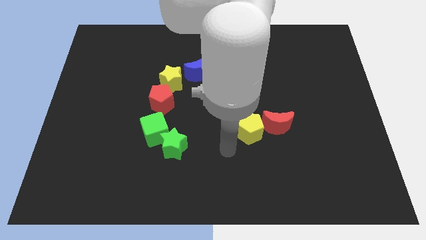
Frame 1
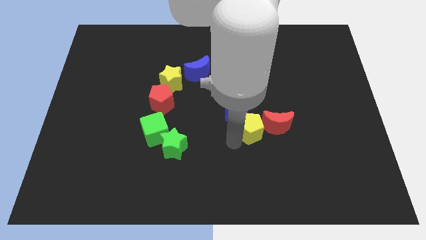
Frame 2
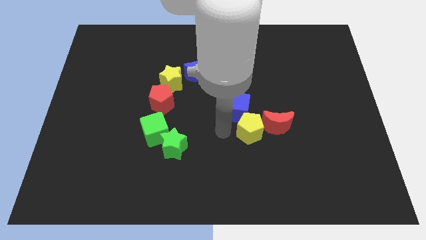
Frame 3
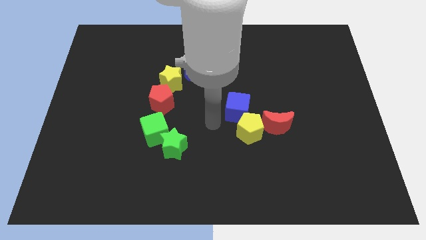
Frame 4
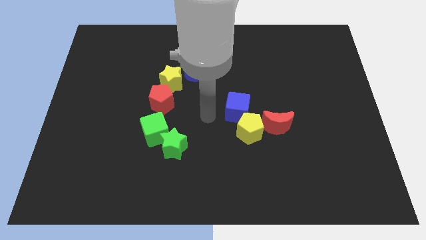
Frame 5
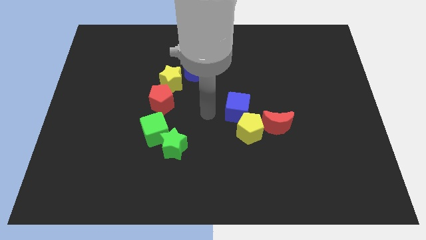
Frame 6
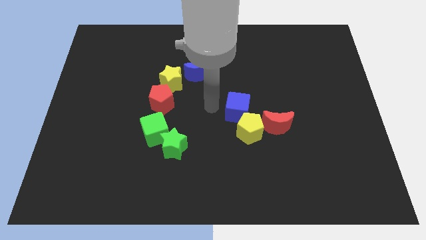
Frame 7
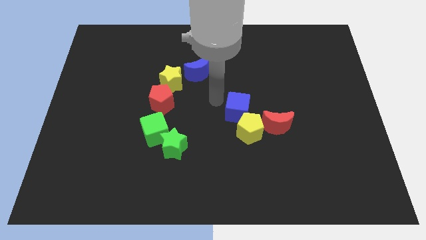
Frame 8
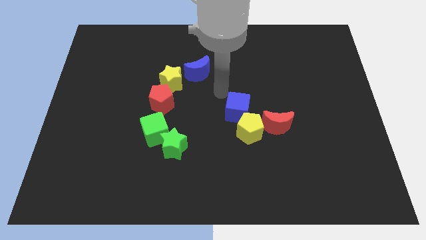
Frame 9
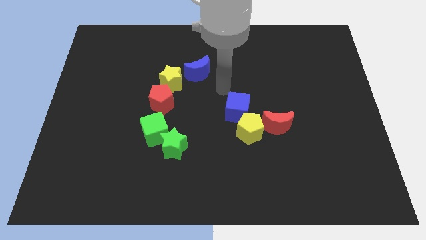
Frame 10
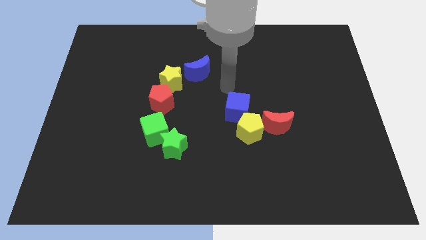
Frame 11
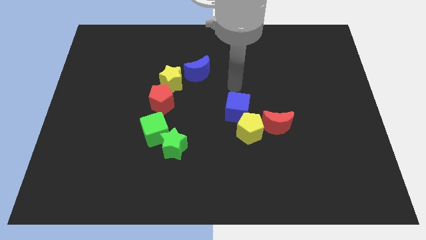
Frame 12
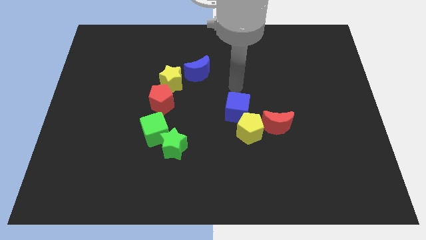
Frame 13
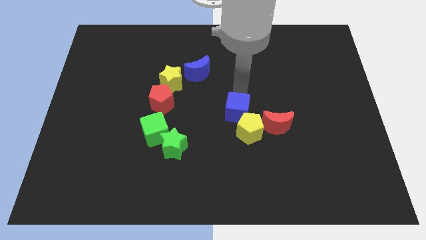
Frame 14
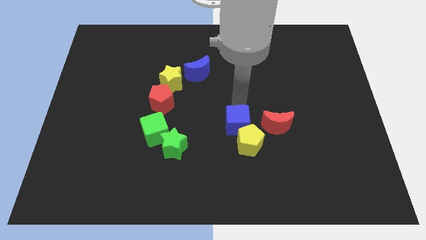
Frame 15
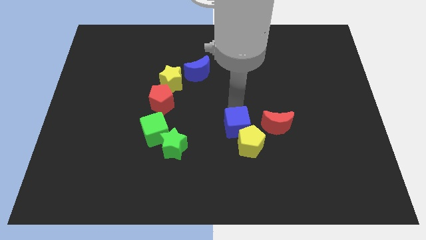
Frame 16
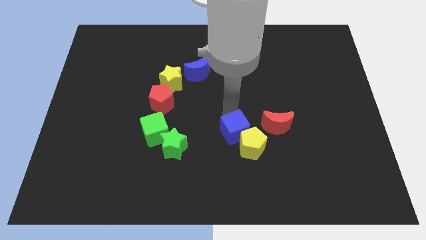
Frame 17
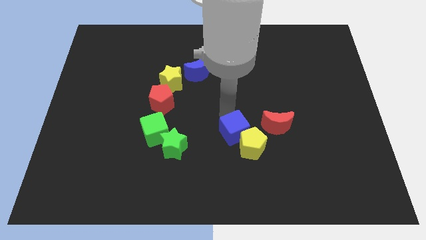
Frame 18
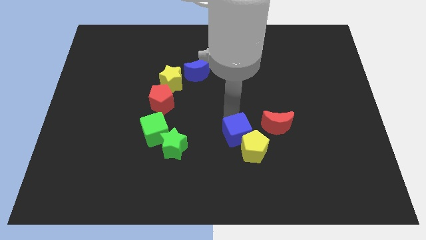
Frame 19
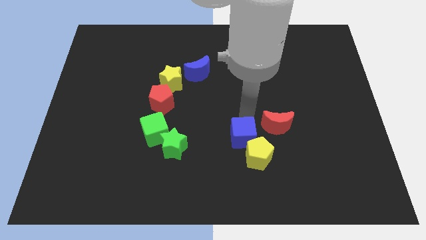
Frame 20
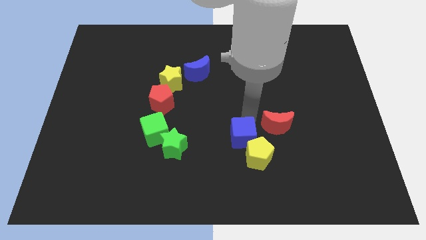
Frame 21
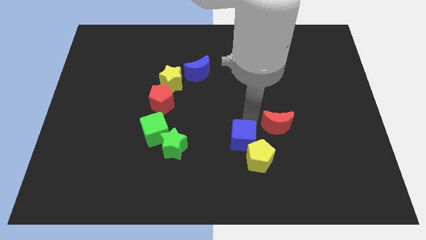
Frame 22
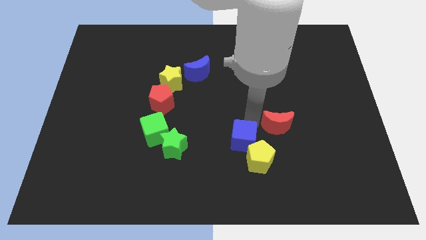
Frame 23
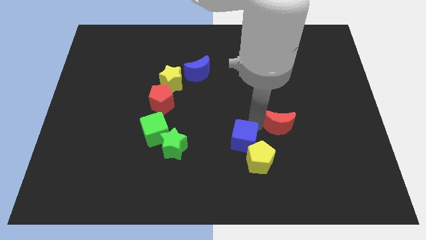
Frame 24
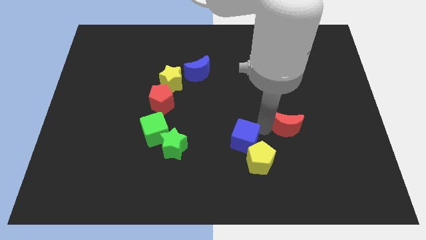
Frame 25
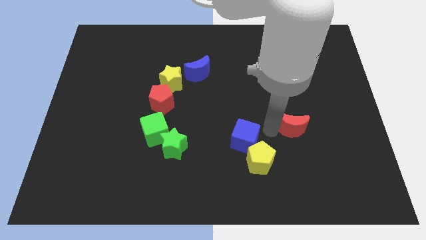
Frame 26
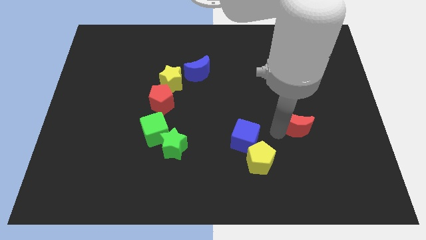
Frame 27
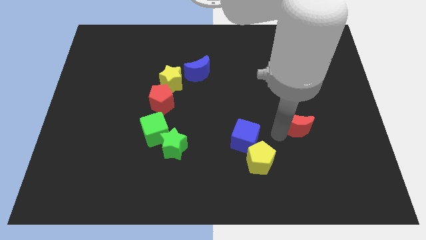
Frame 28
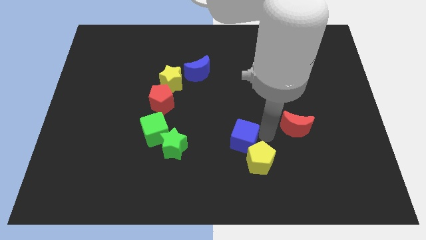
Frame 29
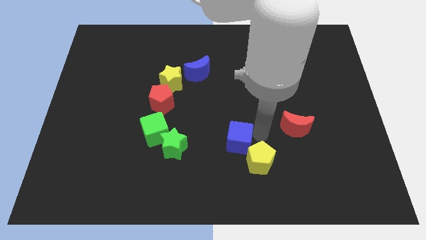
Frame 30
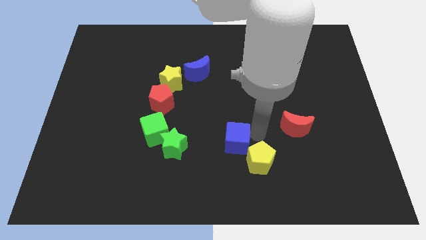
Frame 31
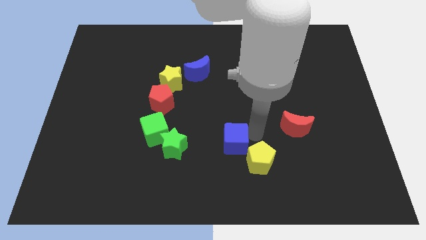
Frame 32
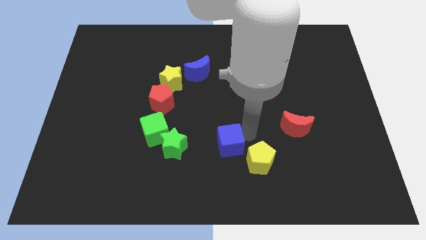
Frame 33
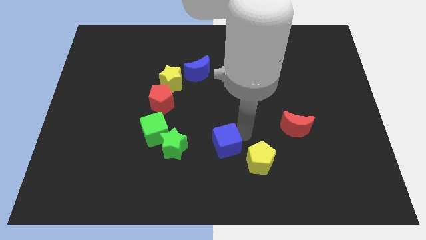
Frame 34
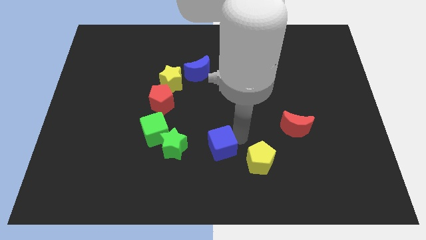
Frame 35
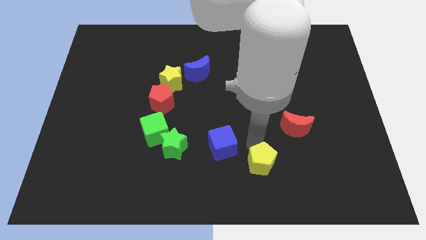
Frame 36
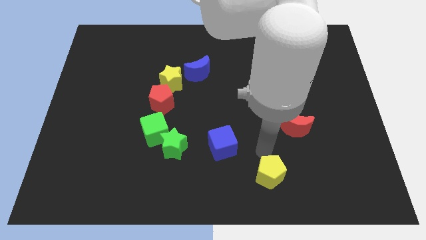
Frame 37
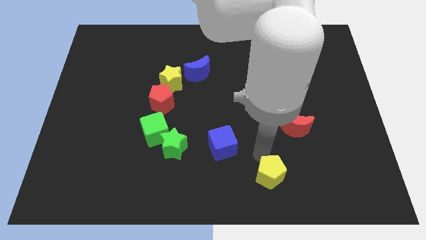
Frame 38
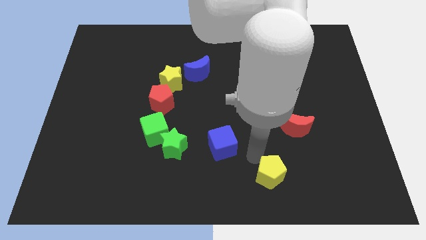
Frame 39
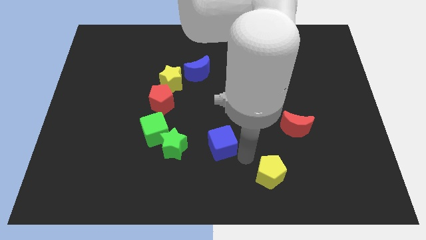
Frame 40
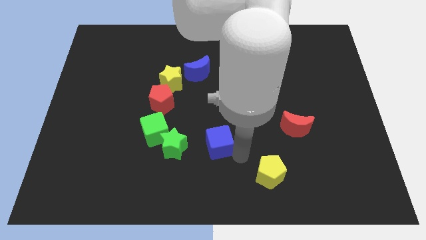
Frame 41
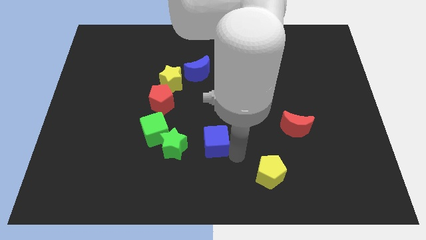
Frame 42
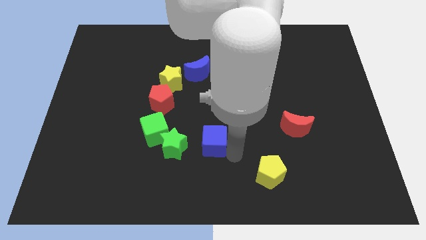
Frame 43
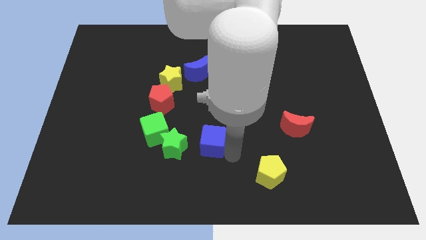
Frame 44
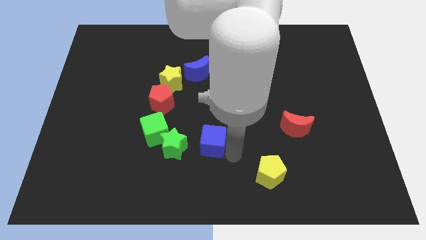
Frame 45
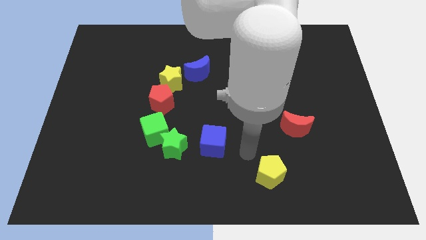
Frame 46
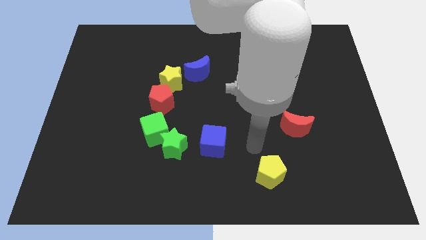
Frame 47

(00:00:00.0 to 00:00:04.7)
separate the blue cube from the yellow pentagon

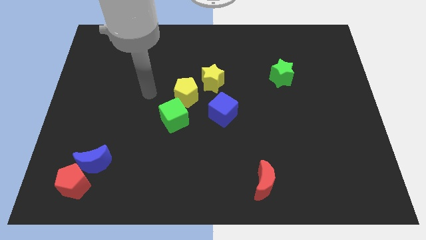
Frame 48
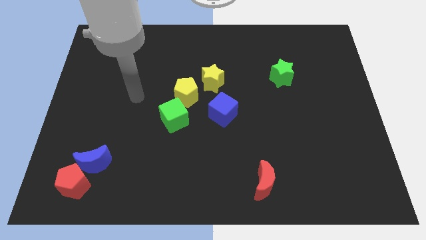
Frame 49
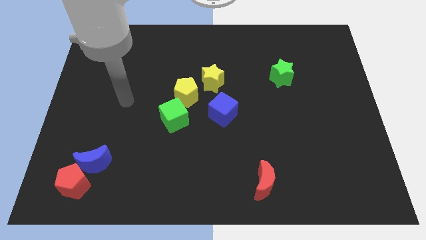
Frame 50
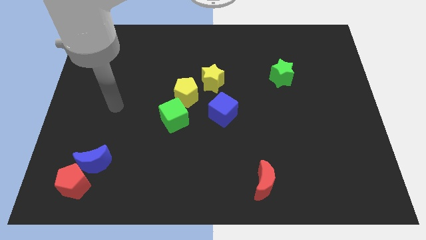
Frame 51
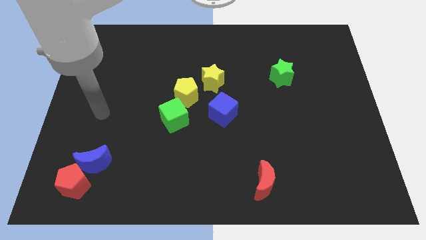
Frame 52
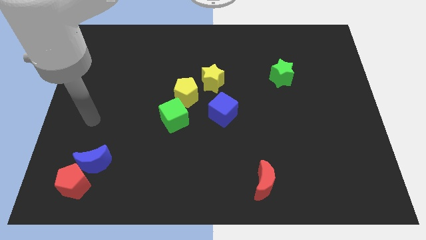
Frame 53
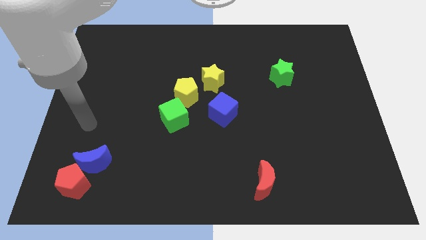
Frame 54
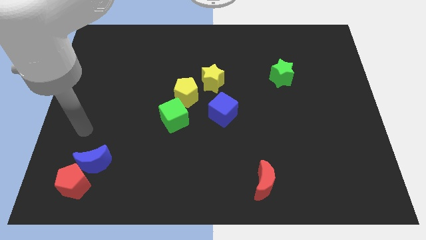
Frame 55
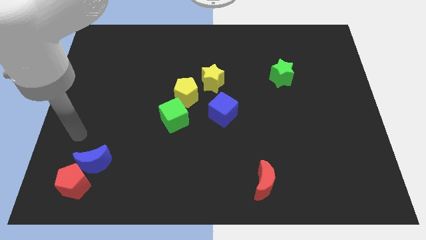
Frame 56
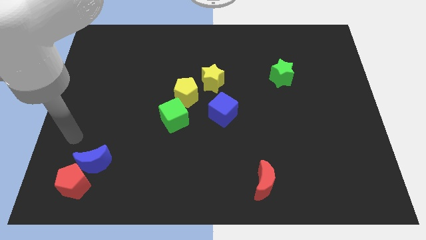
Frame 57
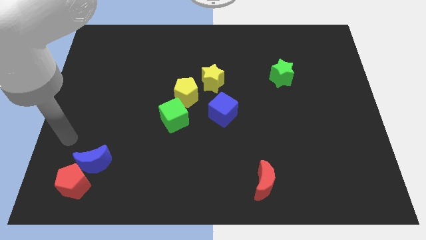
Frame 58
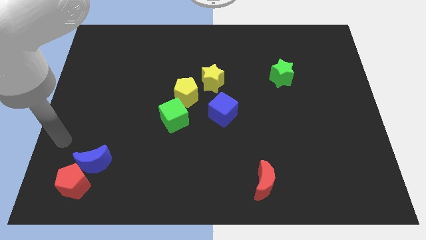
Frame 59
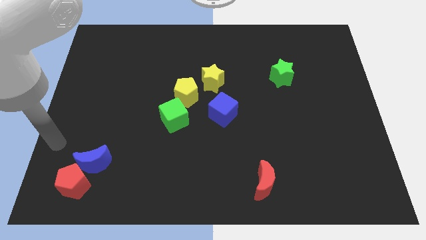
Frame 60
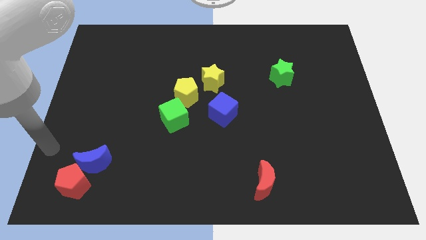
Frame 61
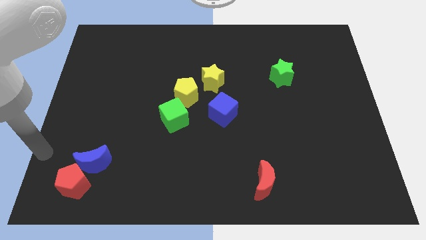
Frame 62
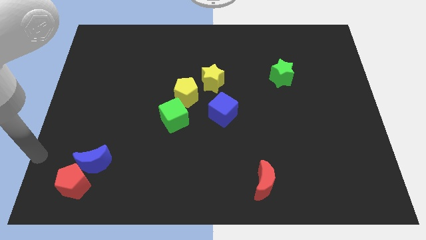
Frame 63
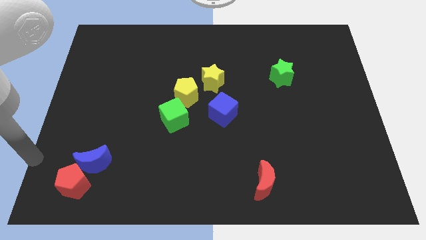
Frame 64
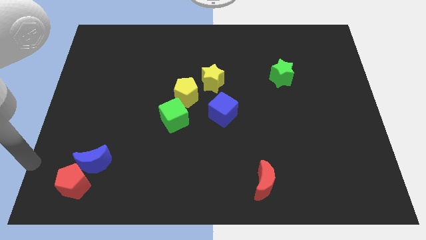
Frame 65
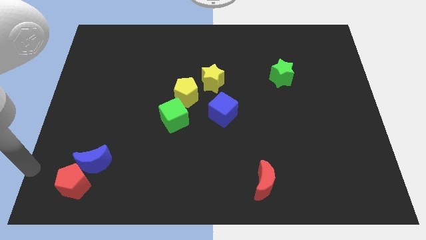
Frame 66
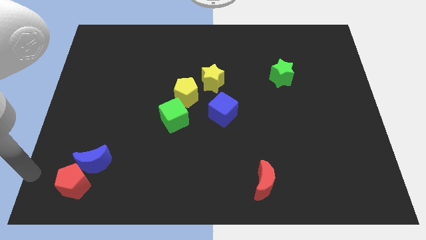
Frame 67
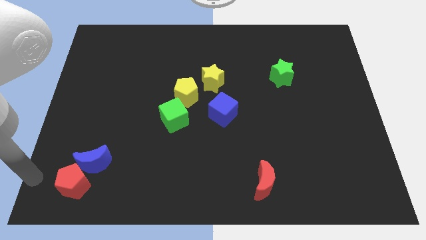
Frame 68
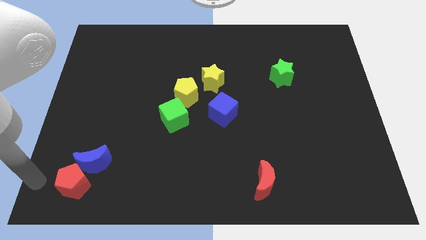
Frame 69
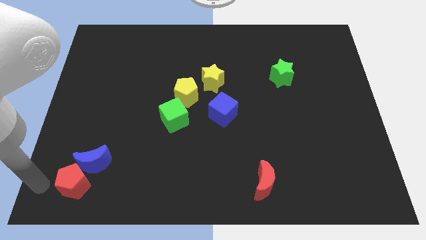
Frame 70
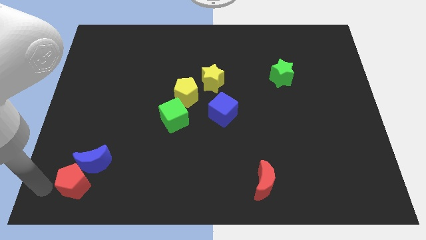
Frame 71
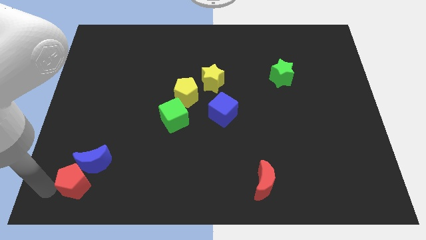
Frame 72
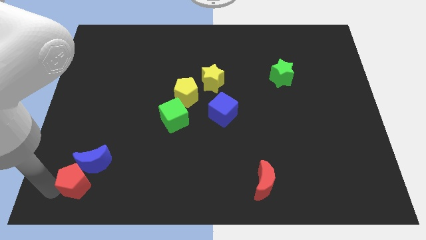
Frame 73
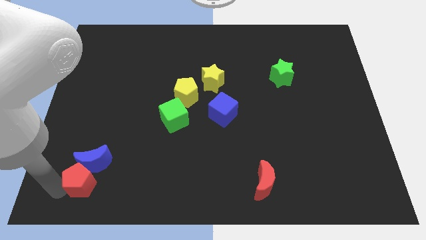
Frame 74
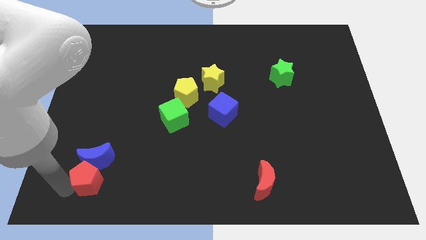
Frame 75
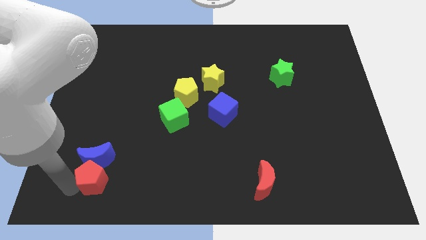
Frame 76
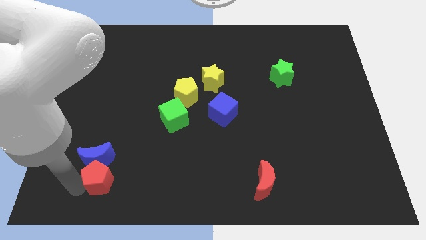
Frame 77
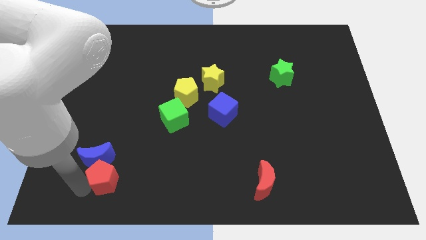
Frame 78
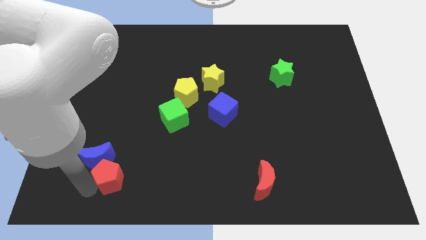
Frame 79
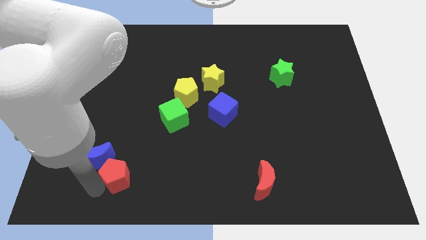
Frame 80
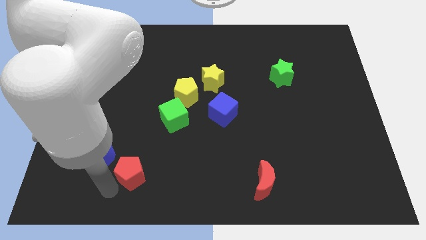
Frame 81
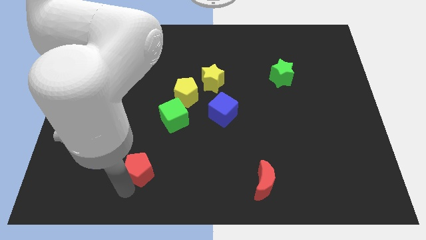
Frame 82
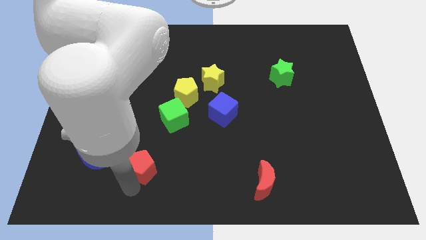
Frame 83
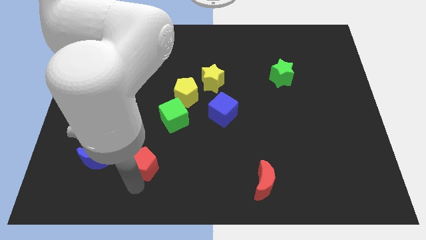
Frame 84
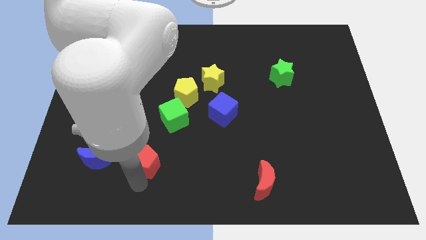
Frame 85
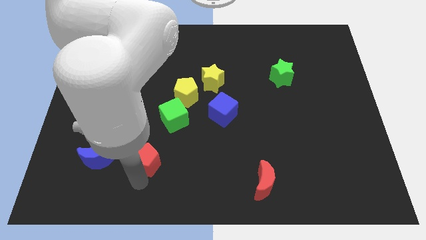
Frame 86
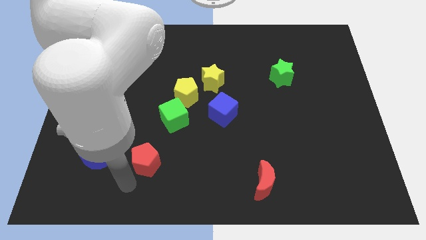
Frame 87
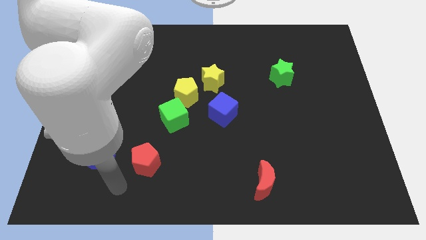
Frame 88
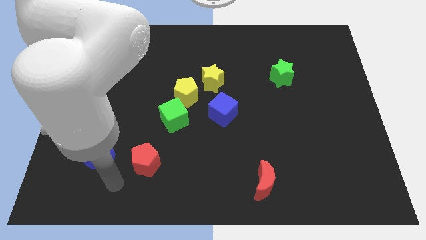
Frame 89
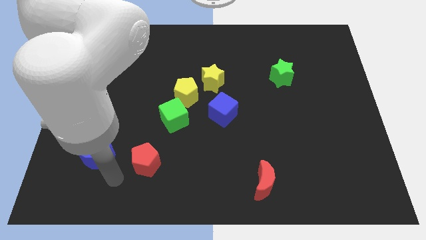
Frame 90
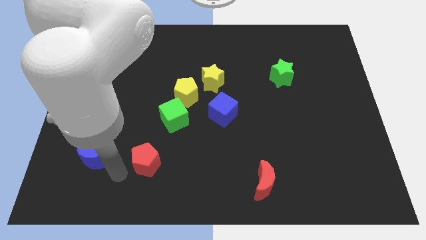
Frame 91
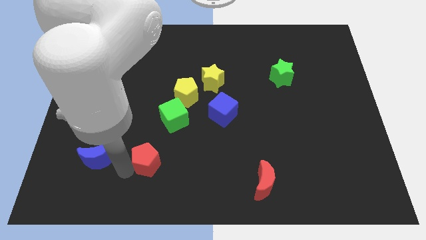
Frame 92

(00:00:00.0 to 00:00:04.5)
separate the red pentagon from the blue crescent
